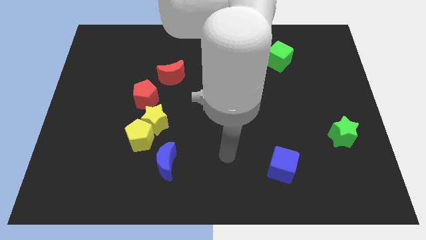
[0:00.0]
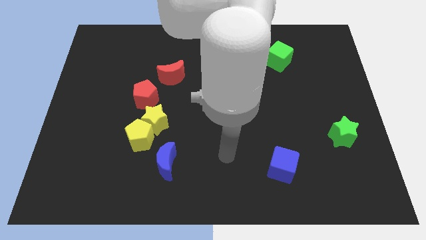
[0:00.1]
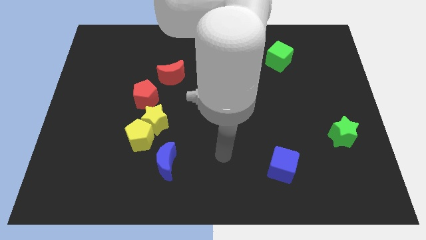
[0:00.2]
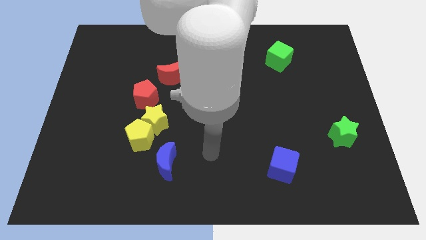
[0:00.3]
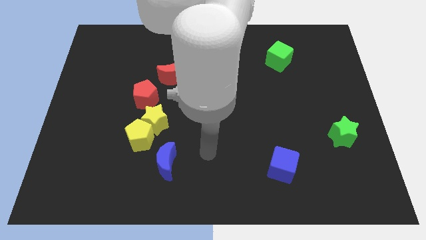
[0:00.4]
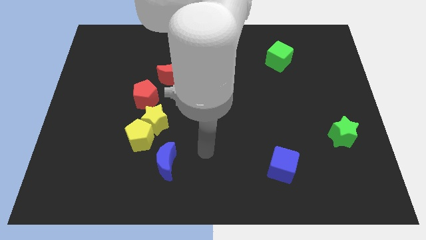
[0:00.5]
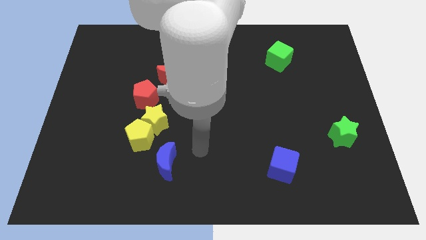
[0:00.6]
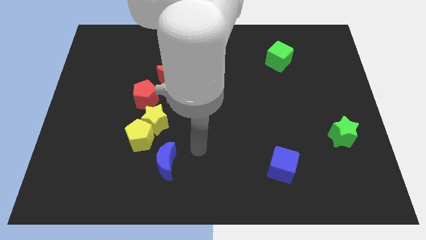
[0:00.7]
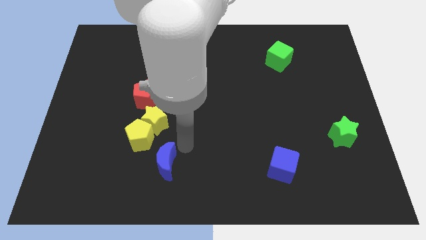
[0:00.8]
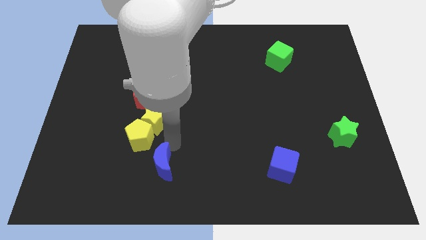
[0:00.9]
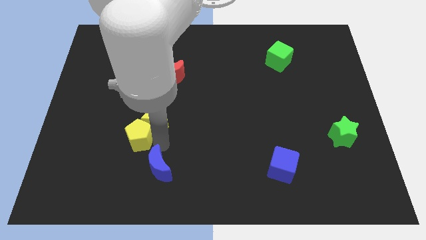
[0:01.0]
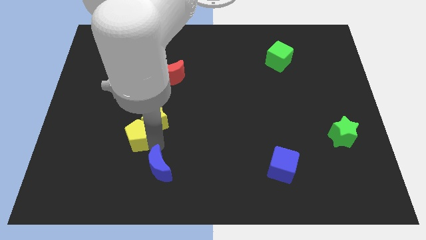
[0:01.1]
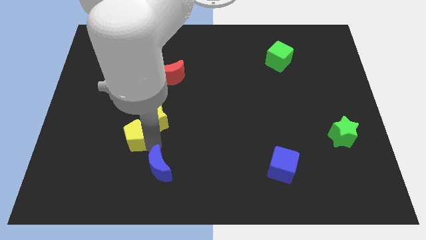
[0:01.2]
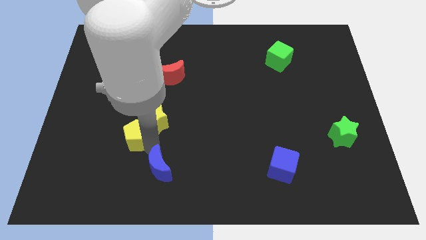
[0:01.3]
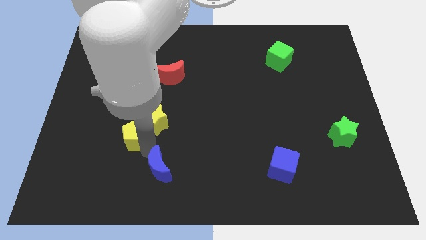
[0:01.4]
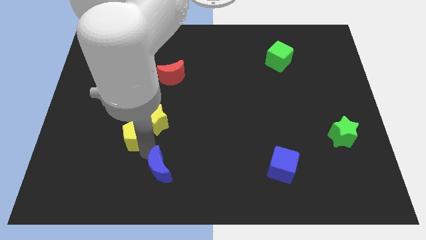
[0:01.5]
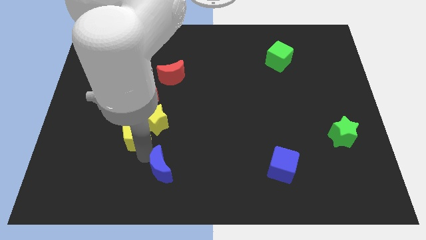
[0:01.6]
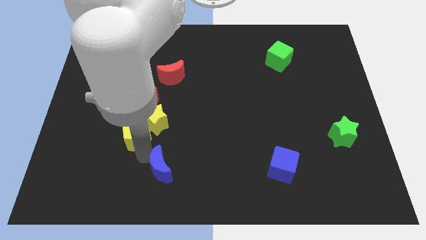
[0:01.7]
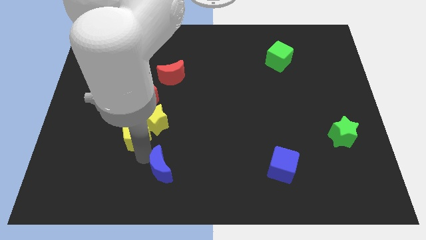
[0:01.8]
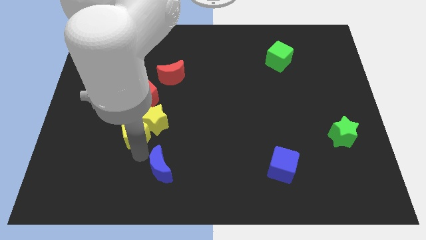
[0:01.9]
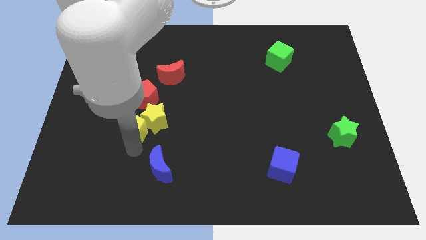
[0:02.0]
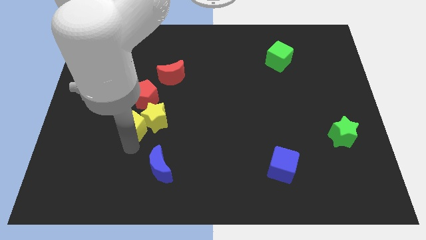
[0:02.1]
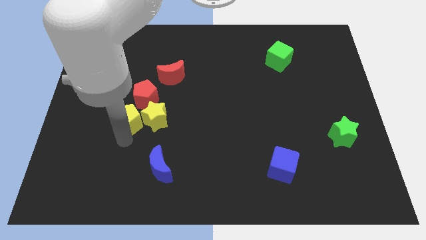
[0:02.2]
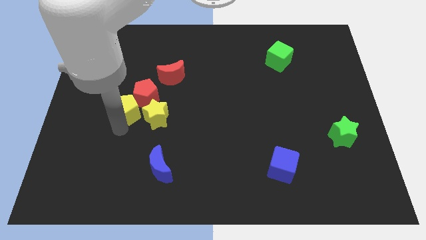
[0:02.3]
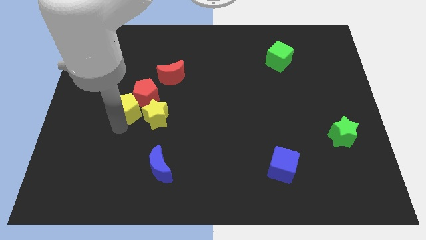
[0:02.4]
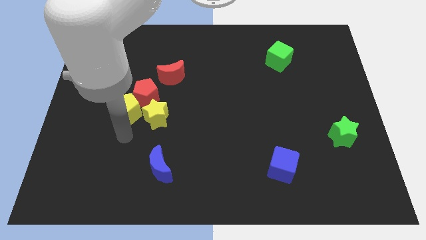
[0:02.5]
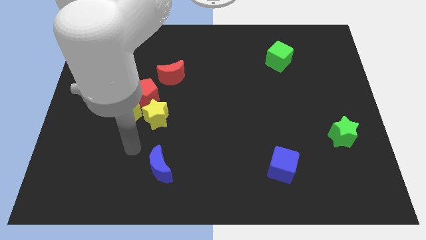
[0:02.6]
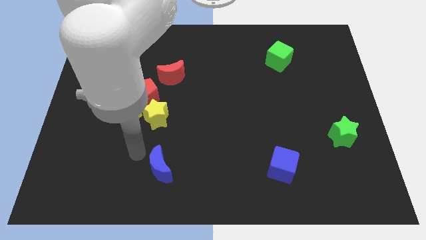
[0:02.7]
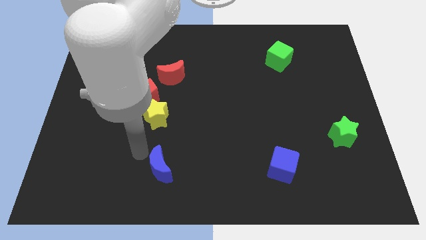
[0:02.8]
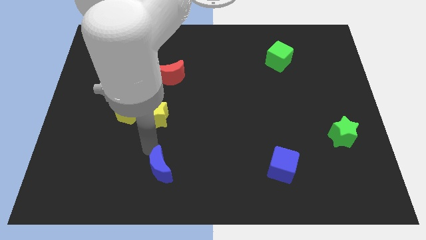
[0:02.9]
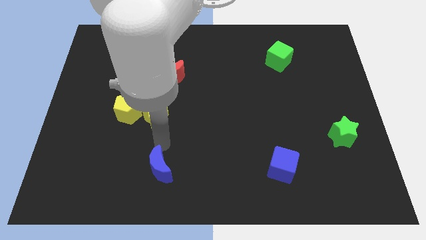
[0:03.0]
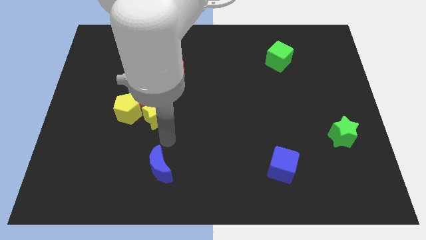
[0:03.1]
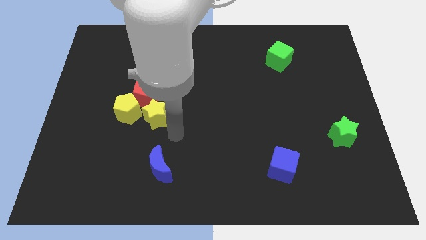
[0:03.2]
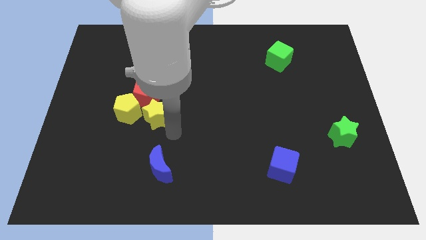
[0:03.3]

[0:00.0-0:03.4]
push the yellow pentagon into the red pentagon

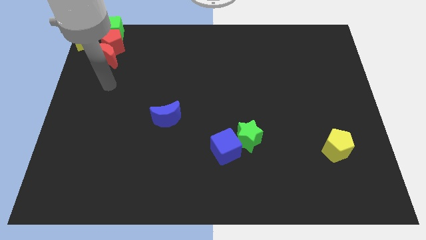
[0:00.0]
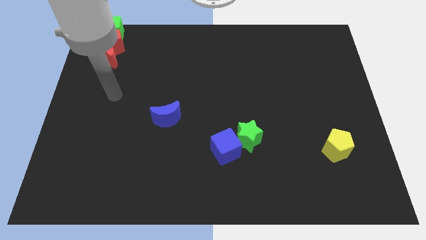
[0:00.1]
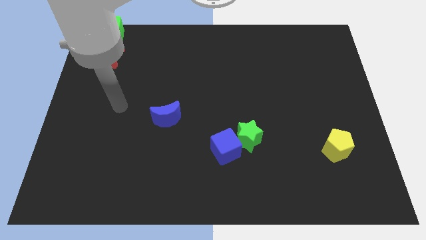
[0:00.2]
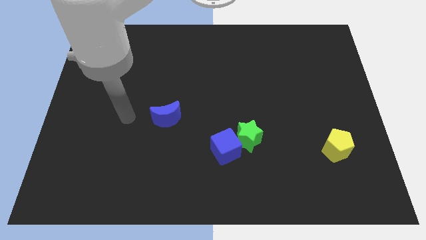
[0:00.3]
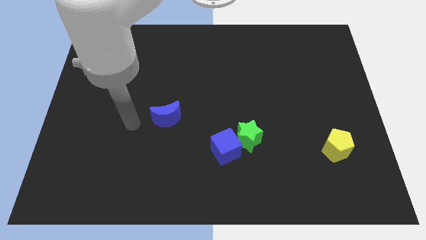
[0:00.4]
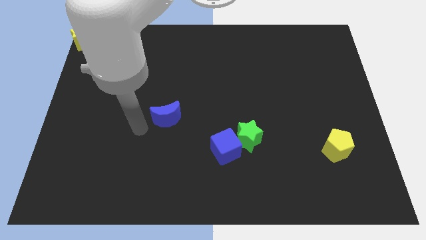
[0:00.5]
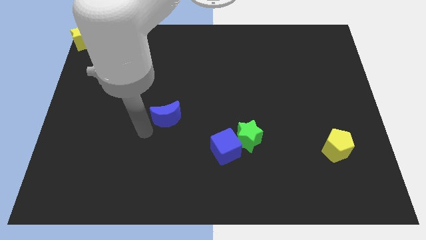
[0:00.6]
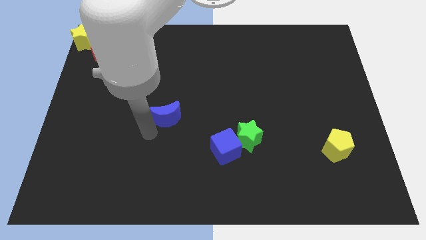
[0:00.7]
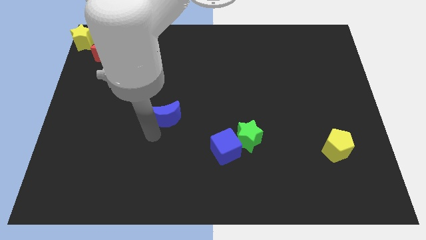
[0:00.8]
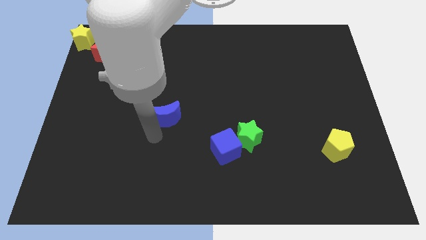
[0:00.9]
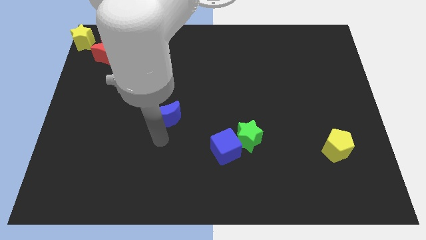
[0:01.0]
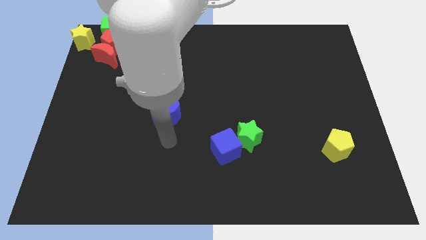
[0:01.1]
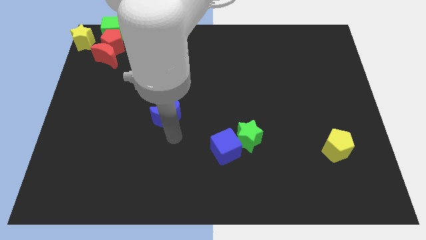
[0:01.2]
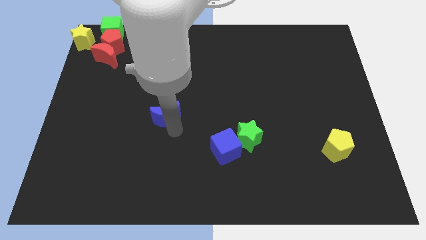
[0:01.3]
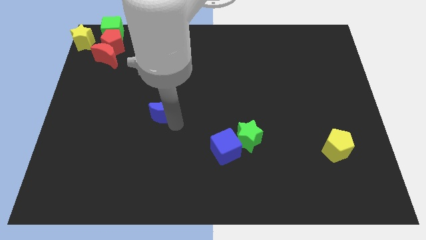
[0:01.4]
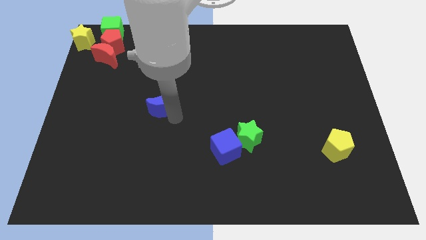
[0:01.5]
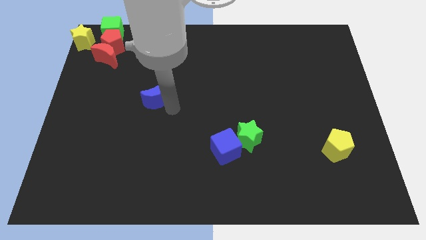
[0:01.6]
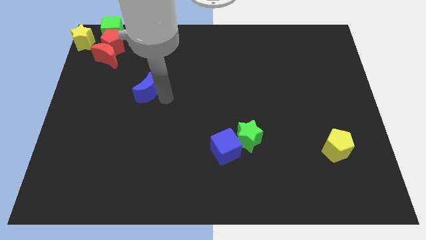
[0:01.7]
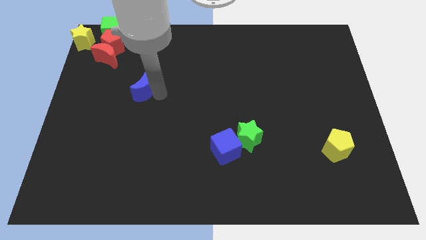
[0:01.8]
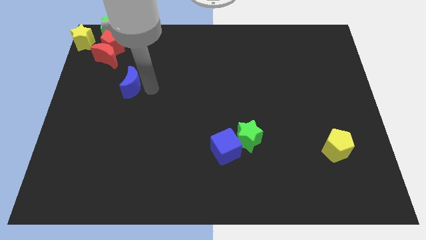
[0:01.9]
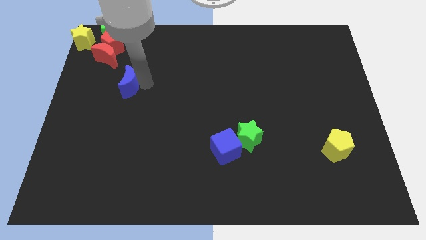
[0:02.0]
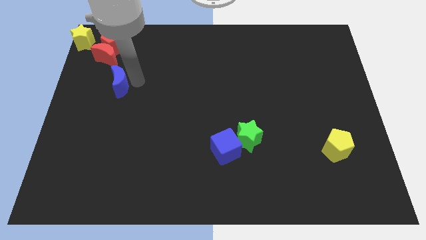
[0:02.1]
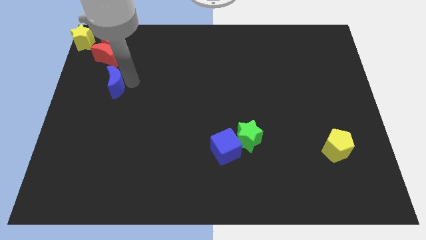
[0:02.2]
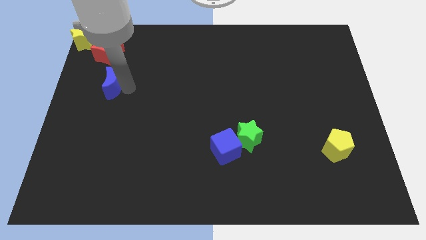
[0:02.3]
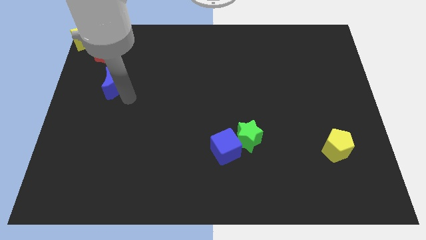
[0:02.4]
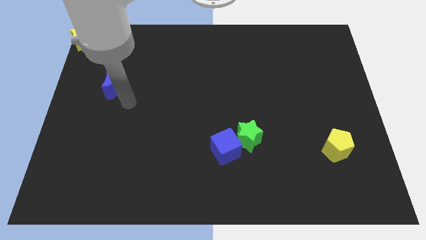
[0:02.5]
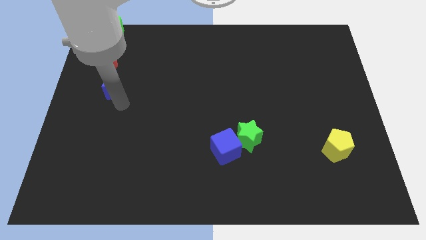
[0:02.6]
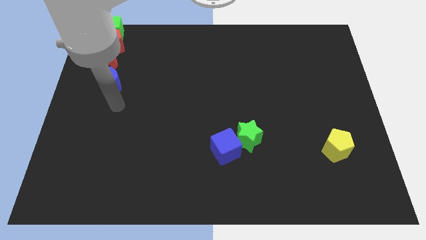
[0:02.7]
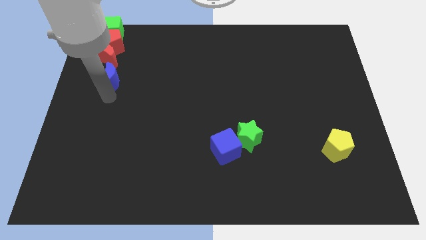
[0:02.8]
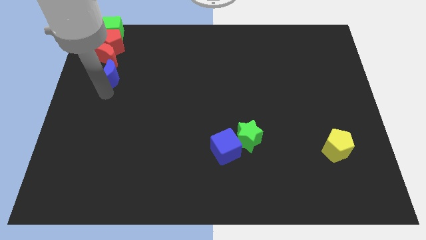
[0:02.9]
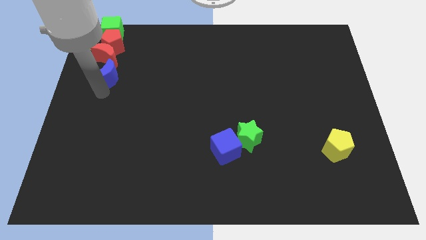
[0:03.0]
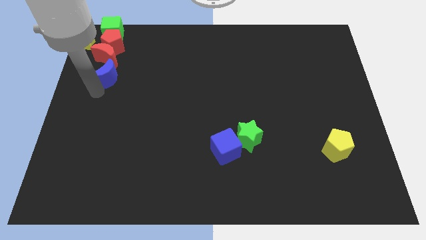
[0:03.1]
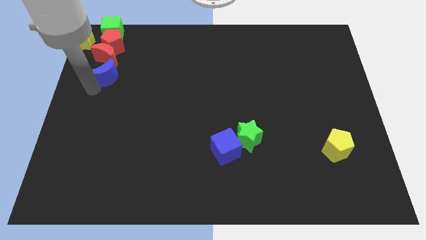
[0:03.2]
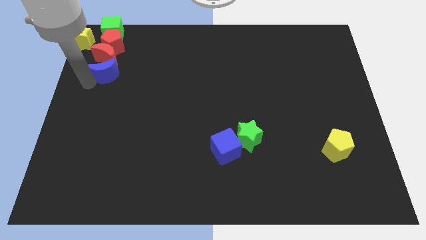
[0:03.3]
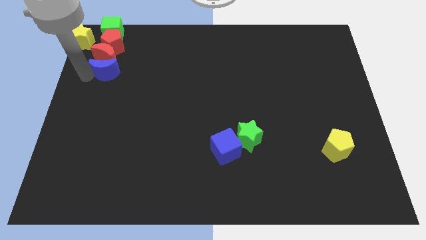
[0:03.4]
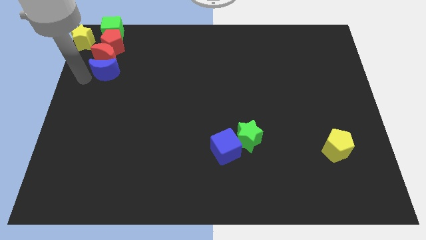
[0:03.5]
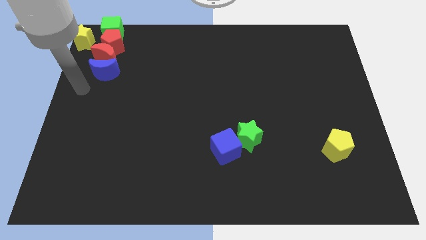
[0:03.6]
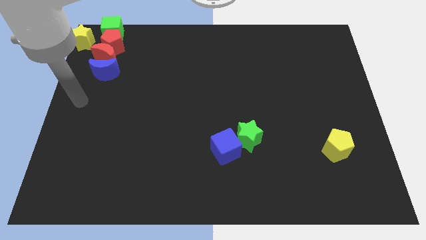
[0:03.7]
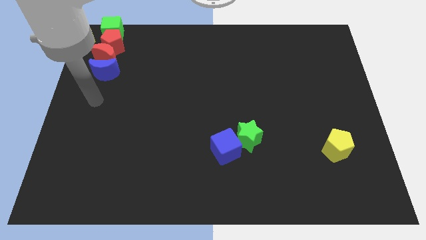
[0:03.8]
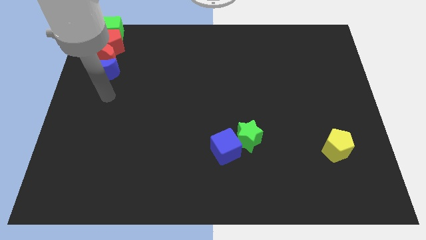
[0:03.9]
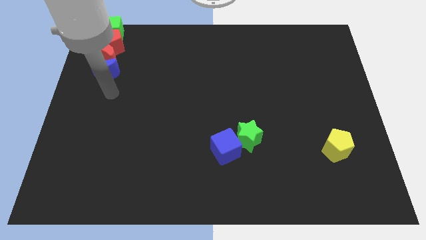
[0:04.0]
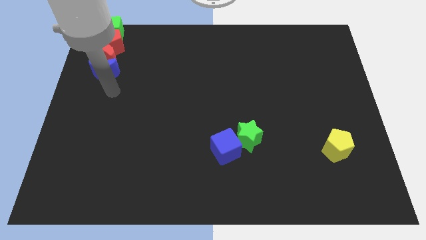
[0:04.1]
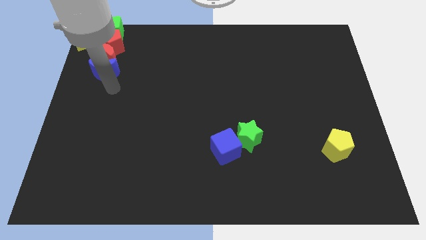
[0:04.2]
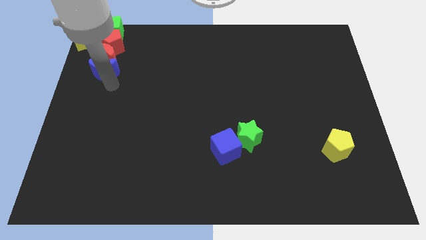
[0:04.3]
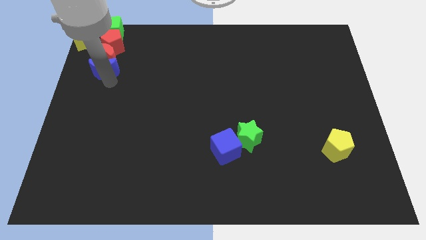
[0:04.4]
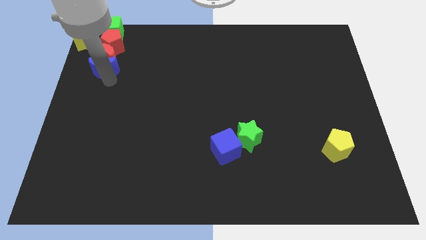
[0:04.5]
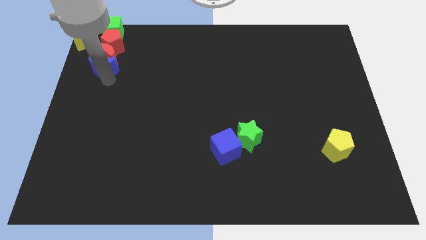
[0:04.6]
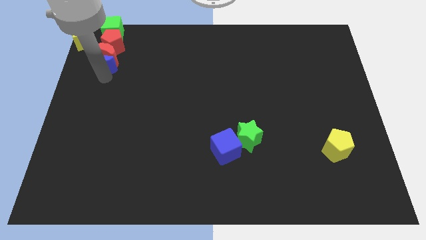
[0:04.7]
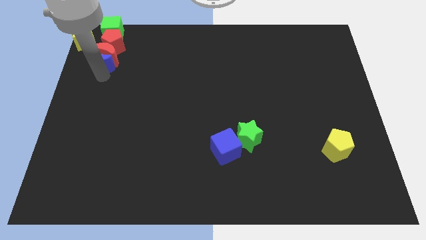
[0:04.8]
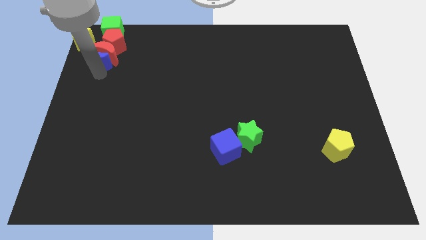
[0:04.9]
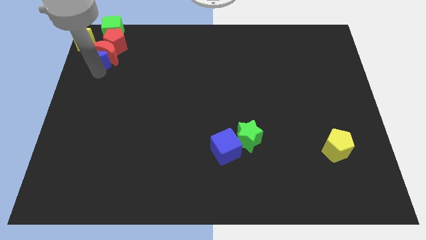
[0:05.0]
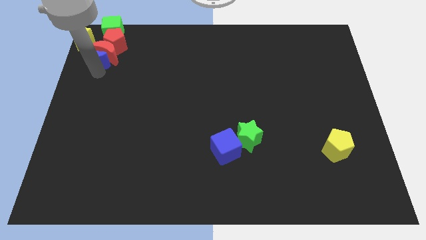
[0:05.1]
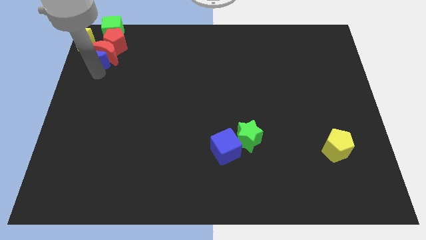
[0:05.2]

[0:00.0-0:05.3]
push the blue crescent into the bottom of the red crescent

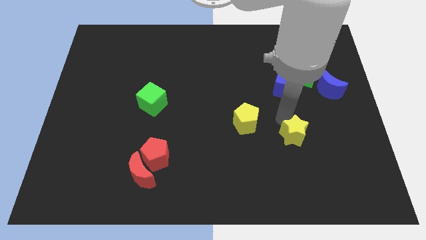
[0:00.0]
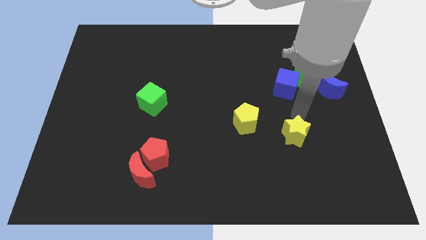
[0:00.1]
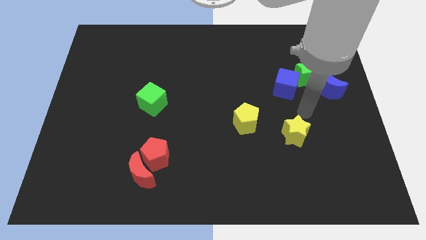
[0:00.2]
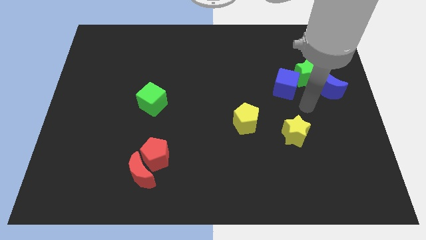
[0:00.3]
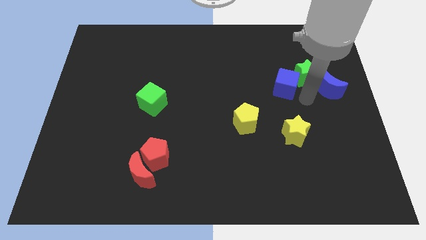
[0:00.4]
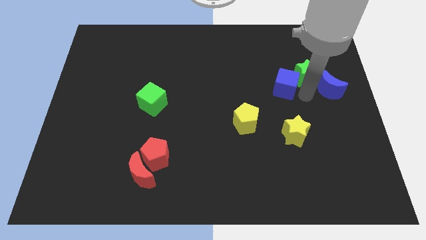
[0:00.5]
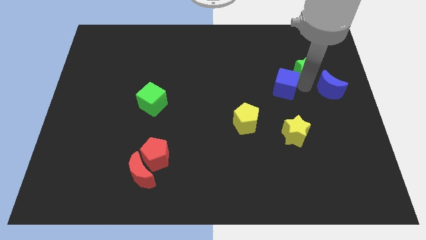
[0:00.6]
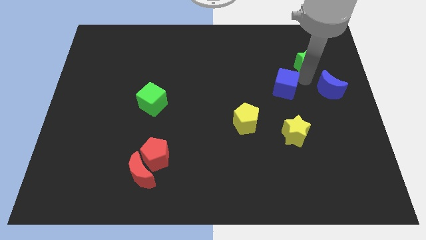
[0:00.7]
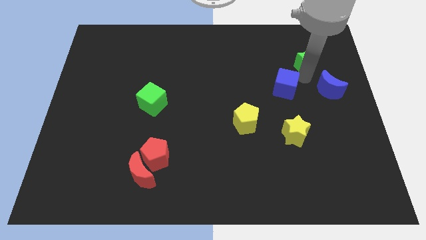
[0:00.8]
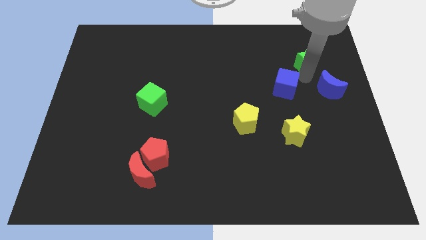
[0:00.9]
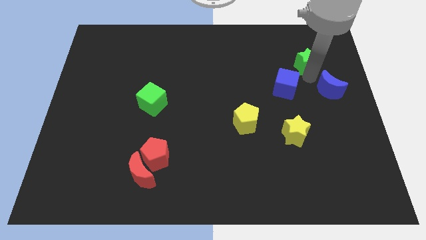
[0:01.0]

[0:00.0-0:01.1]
slightly push the green star up
